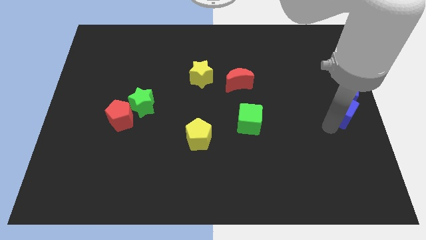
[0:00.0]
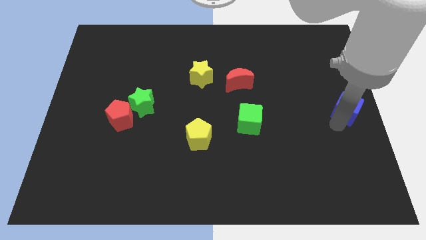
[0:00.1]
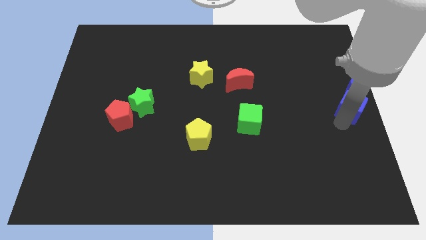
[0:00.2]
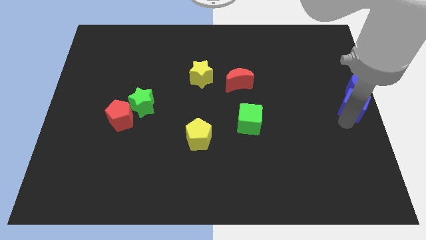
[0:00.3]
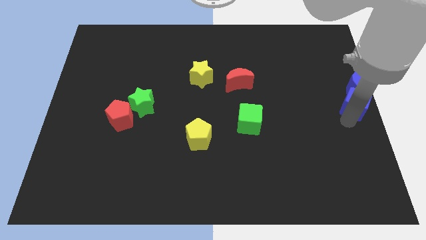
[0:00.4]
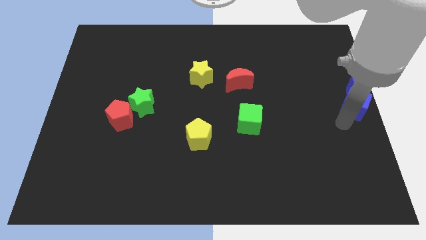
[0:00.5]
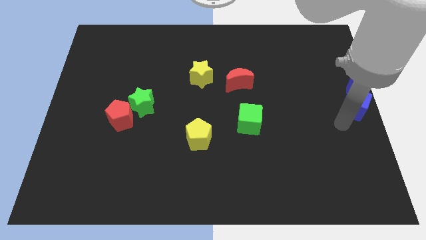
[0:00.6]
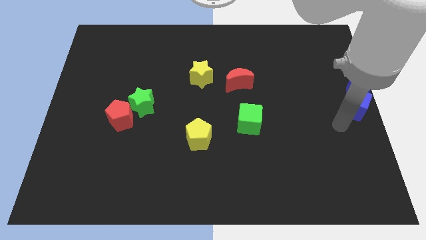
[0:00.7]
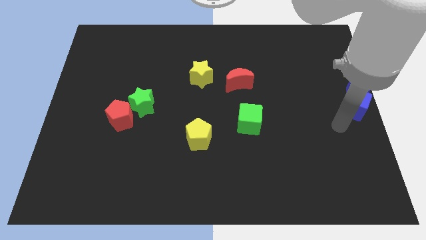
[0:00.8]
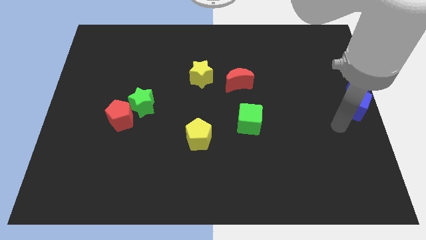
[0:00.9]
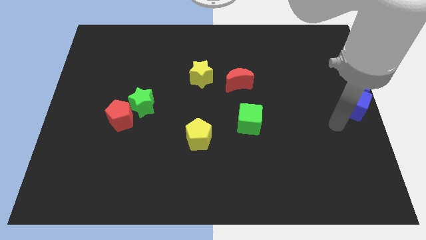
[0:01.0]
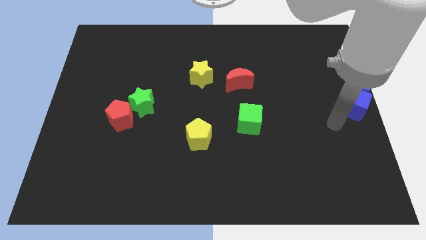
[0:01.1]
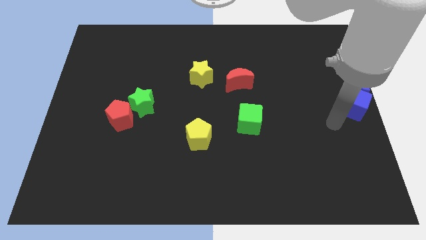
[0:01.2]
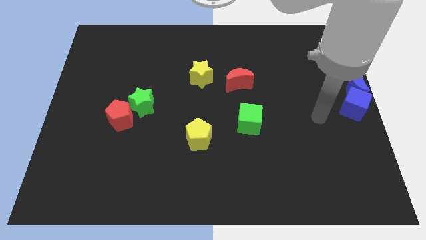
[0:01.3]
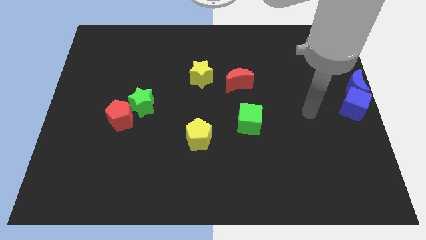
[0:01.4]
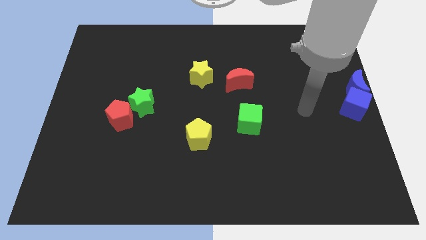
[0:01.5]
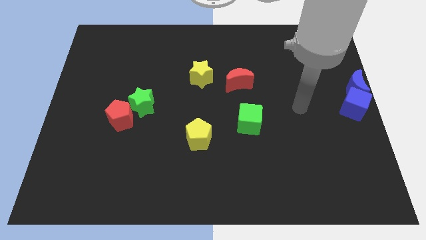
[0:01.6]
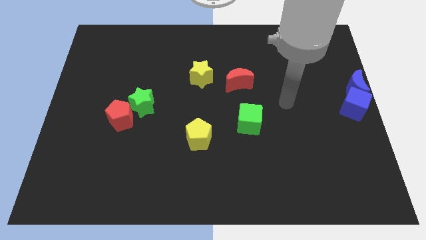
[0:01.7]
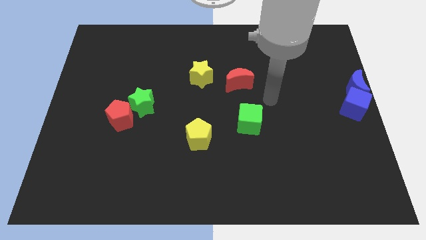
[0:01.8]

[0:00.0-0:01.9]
push the blue cube into the blue crescent

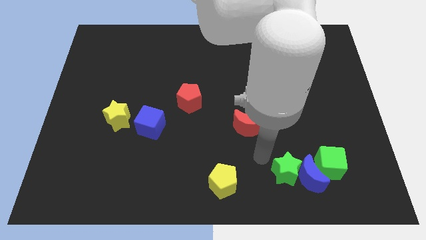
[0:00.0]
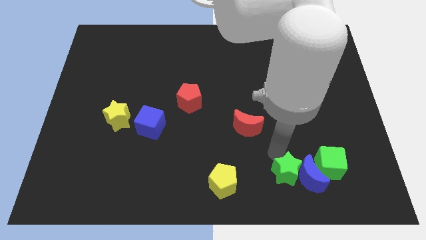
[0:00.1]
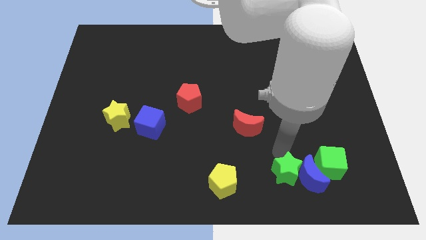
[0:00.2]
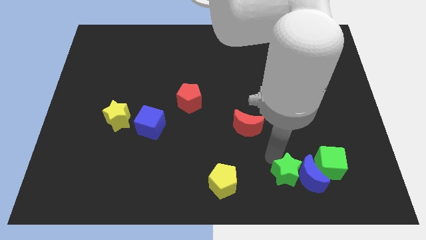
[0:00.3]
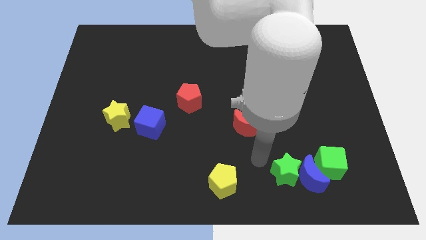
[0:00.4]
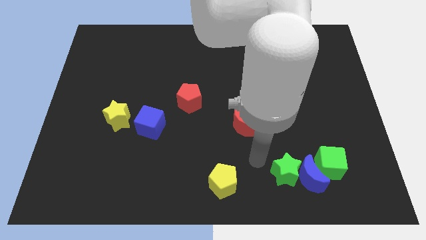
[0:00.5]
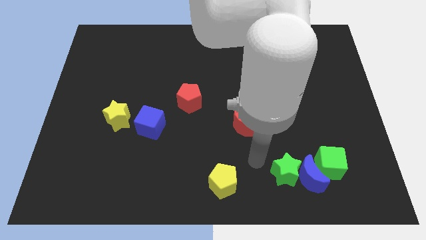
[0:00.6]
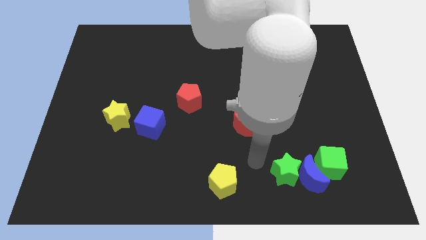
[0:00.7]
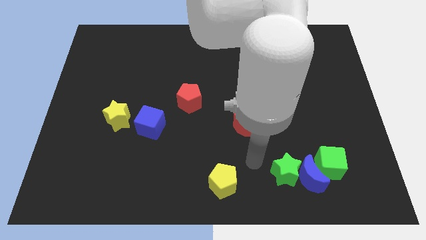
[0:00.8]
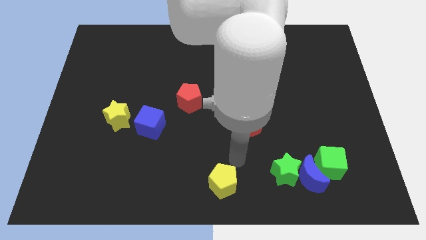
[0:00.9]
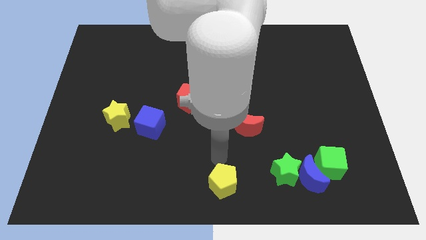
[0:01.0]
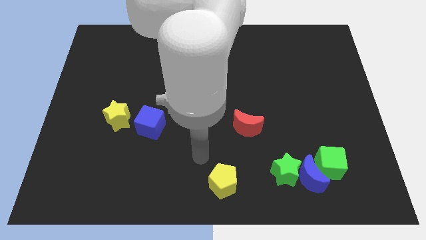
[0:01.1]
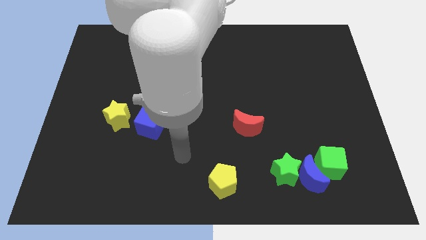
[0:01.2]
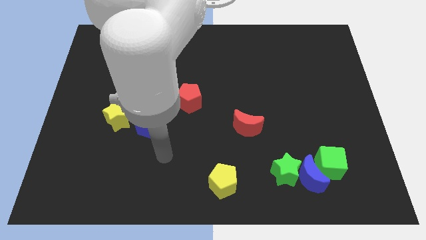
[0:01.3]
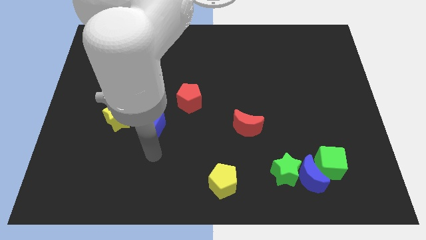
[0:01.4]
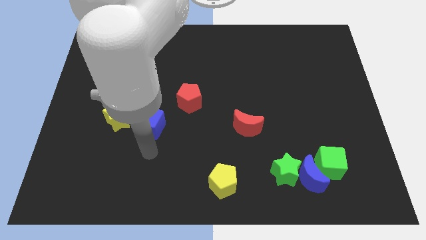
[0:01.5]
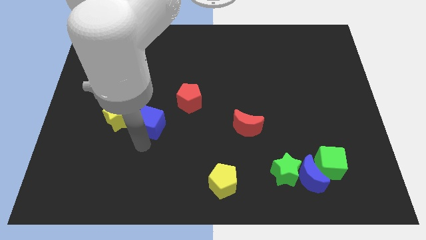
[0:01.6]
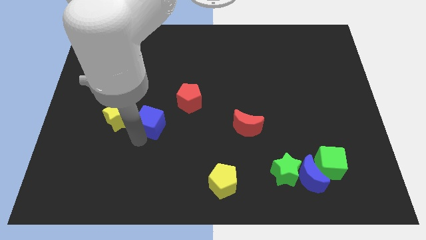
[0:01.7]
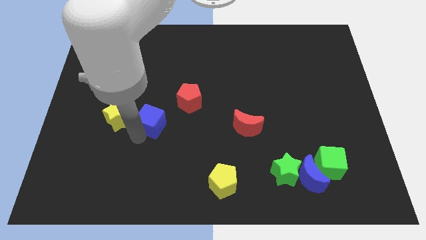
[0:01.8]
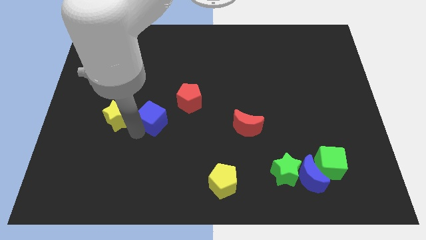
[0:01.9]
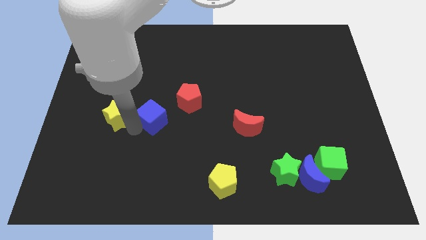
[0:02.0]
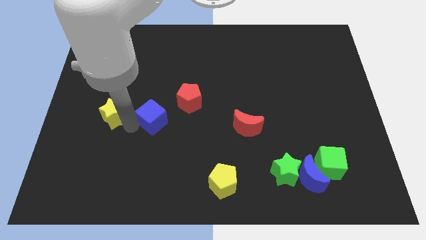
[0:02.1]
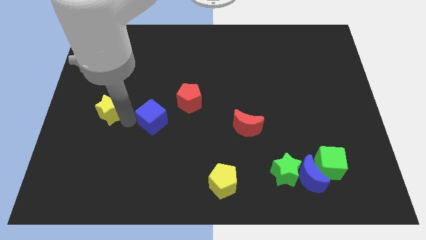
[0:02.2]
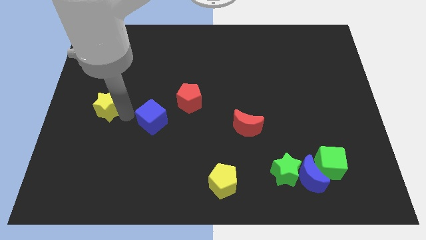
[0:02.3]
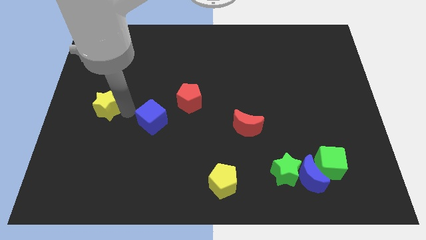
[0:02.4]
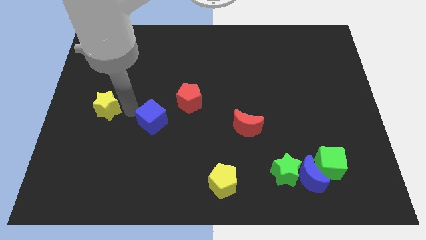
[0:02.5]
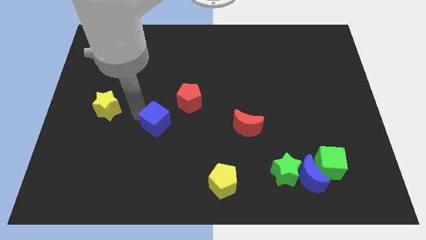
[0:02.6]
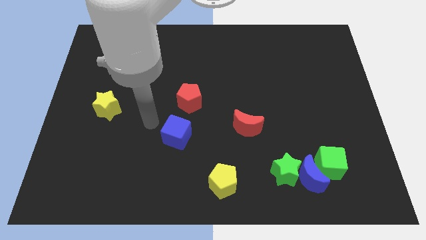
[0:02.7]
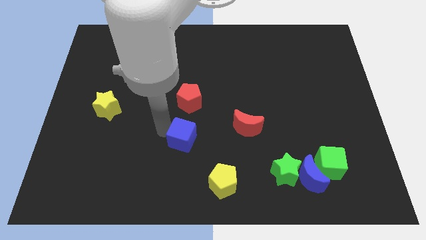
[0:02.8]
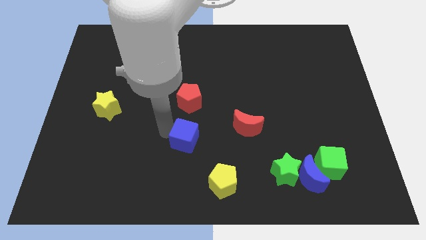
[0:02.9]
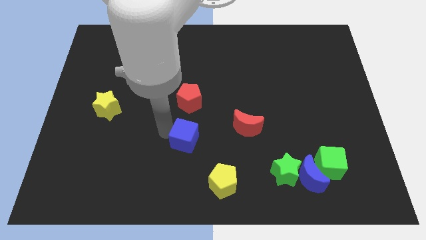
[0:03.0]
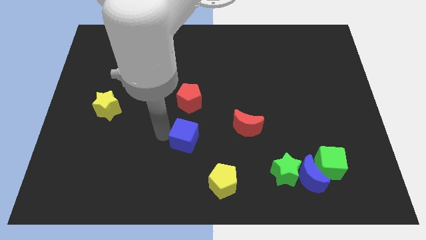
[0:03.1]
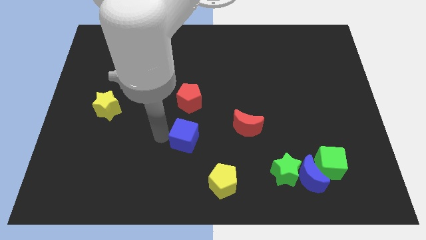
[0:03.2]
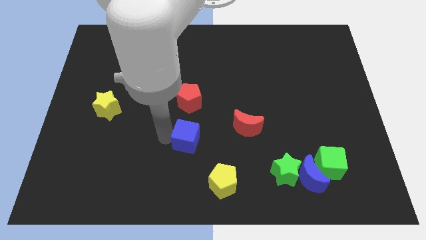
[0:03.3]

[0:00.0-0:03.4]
place the blue cube below the red pentagon

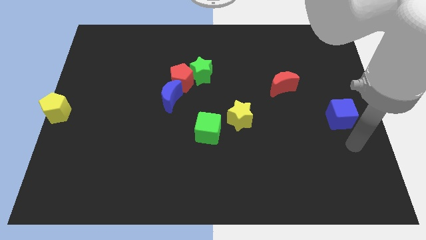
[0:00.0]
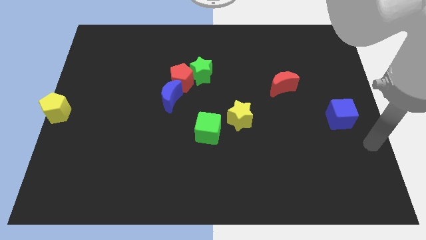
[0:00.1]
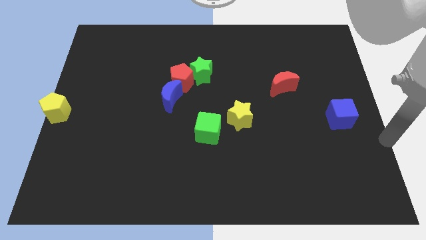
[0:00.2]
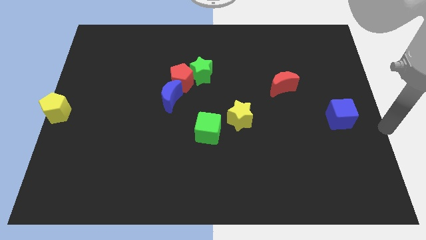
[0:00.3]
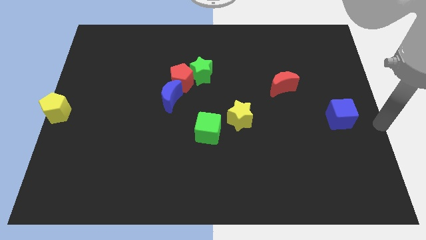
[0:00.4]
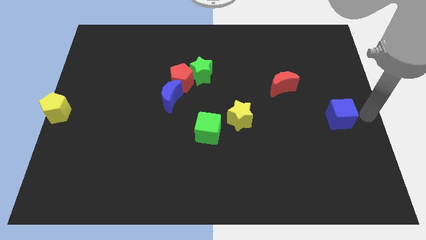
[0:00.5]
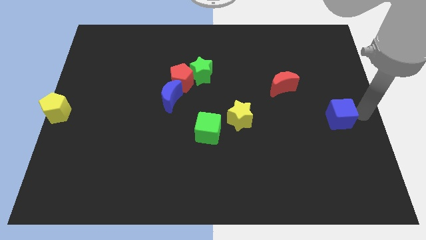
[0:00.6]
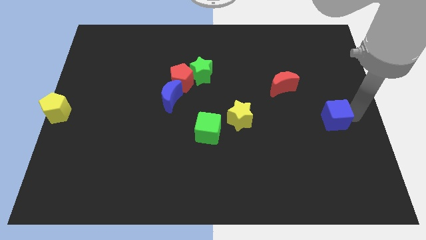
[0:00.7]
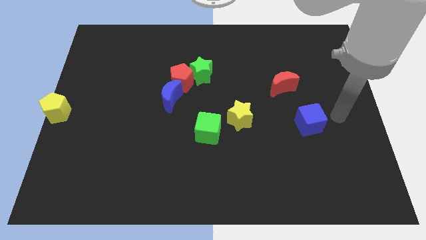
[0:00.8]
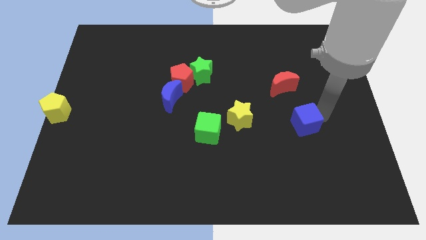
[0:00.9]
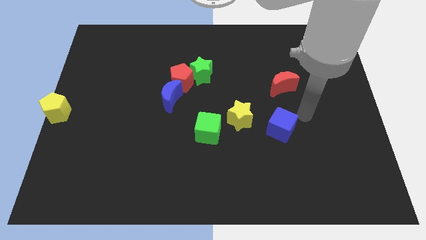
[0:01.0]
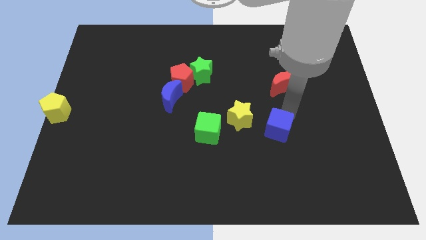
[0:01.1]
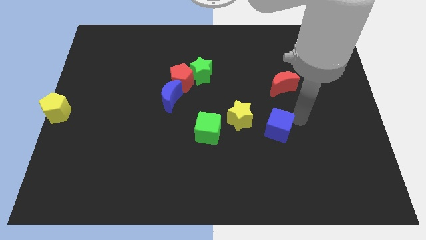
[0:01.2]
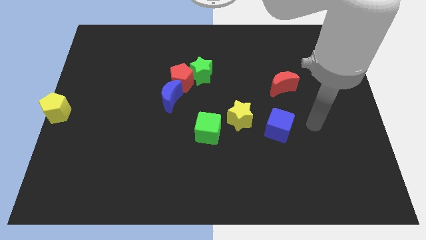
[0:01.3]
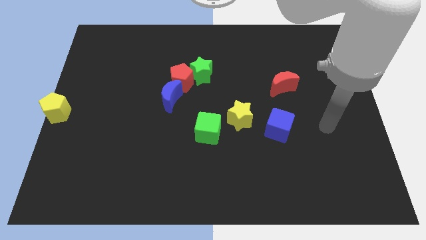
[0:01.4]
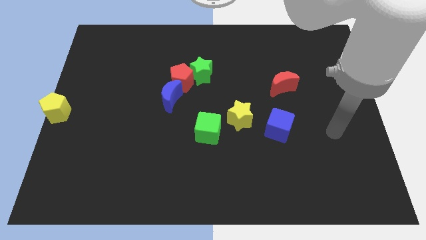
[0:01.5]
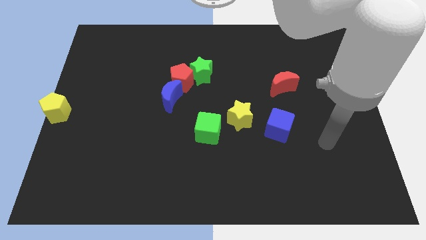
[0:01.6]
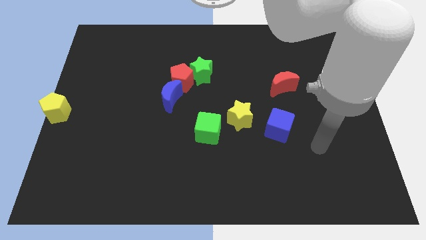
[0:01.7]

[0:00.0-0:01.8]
slightly move the blue cube towards the left

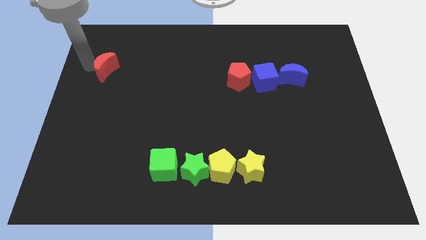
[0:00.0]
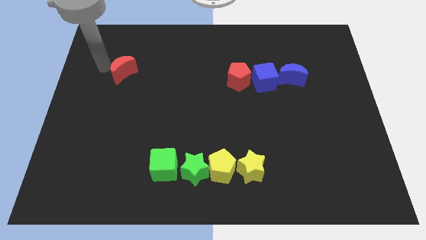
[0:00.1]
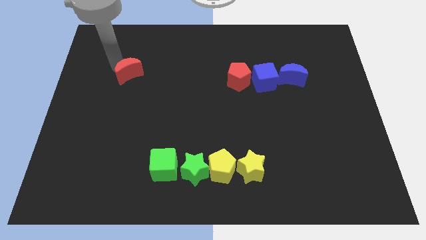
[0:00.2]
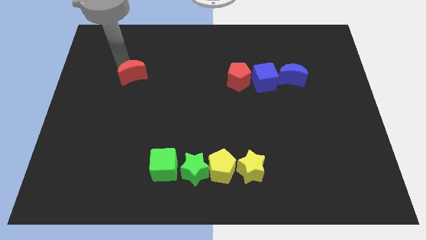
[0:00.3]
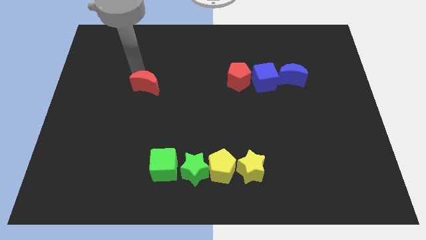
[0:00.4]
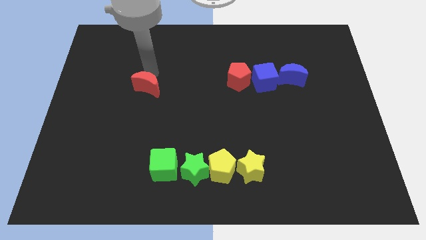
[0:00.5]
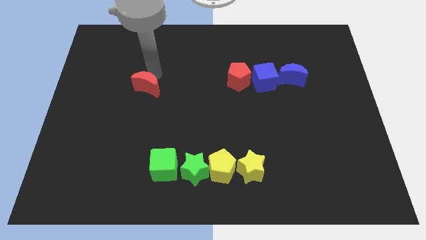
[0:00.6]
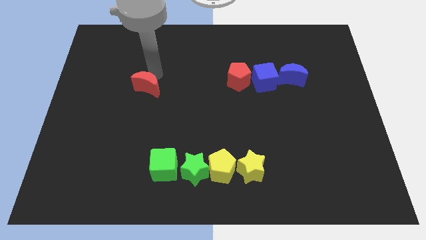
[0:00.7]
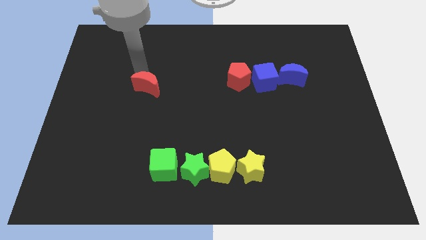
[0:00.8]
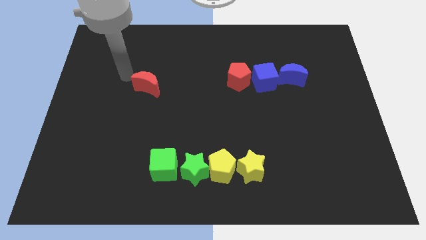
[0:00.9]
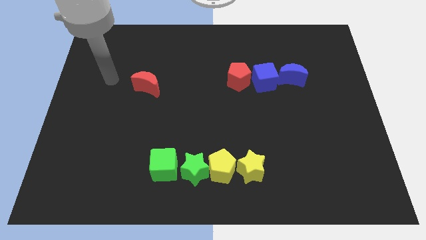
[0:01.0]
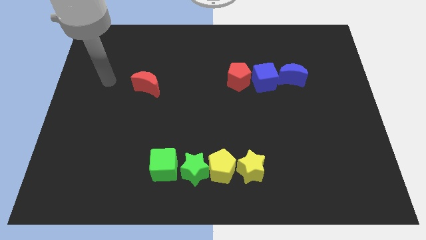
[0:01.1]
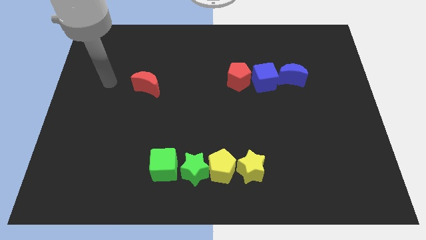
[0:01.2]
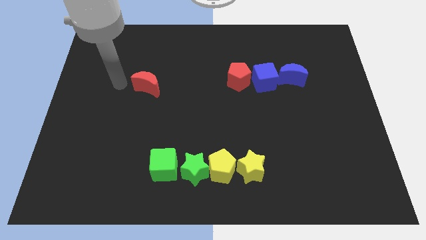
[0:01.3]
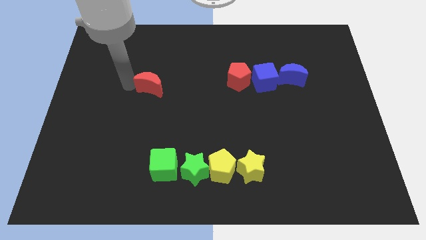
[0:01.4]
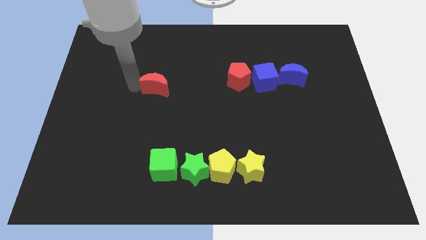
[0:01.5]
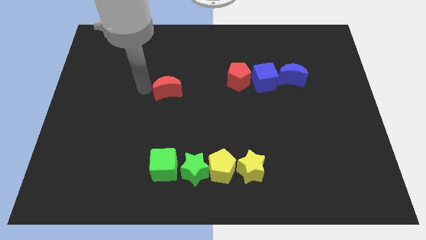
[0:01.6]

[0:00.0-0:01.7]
put the red moon vertically above the green cube

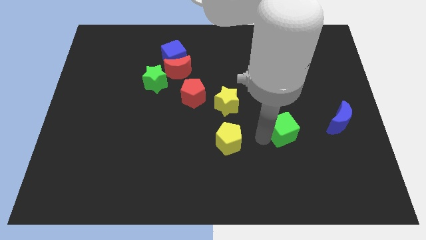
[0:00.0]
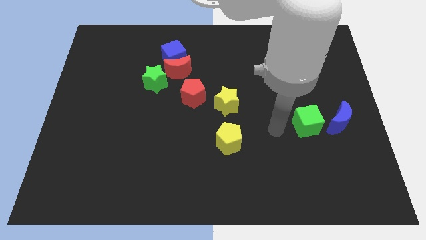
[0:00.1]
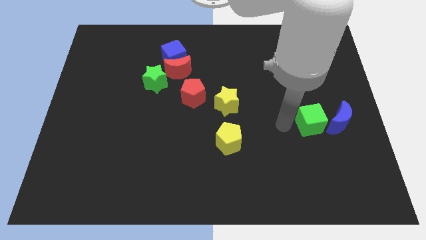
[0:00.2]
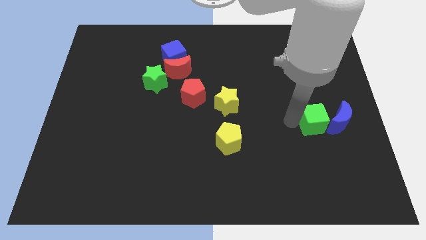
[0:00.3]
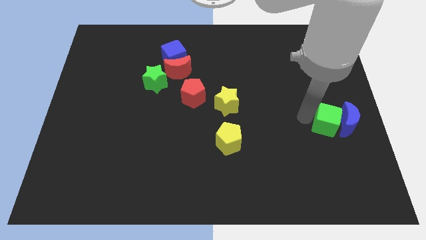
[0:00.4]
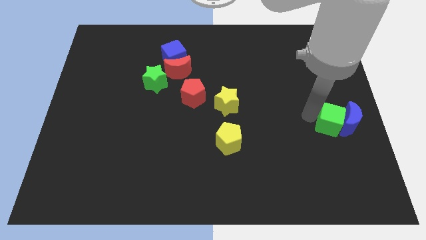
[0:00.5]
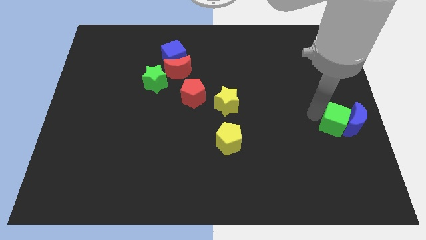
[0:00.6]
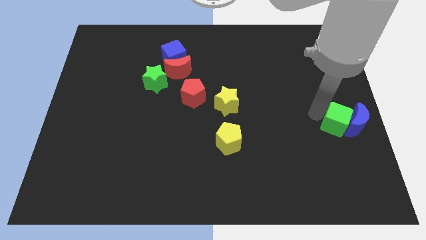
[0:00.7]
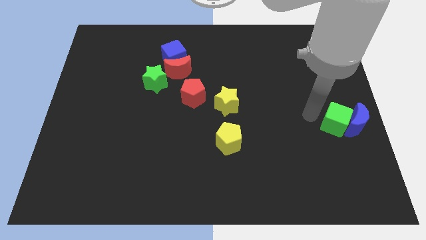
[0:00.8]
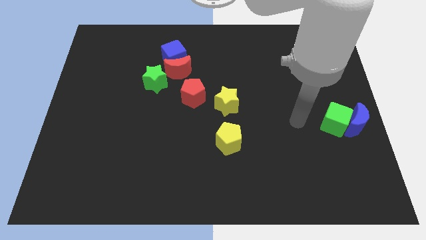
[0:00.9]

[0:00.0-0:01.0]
push the green cube into the blue moon
